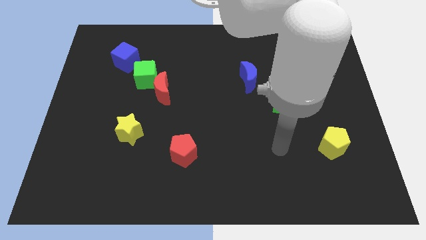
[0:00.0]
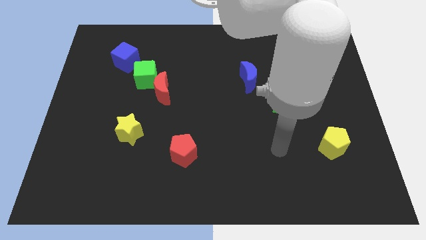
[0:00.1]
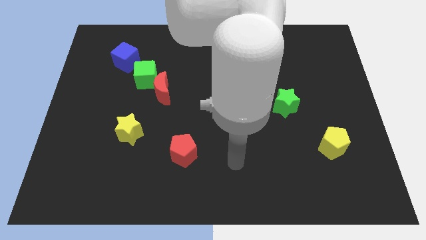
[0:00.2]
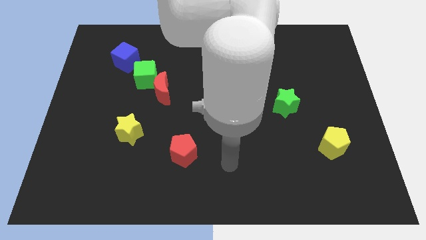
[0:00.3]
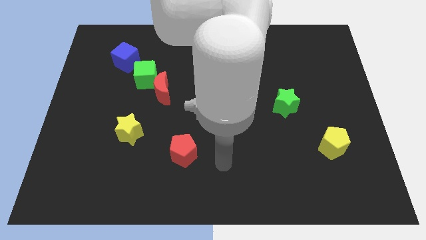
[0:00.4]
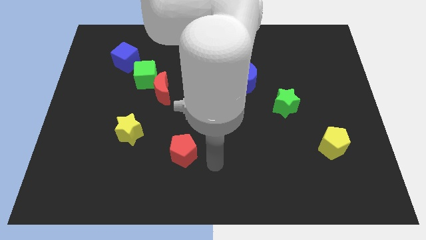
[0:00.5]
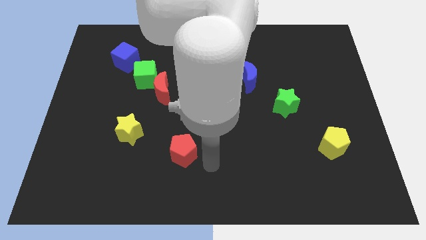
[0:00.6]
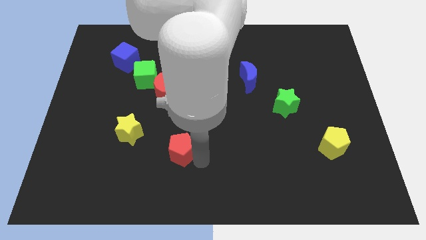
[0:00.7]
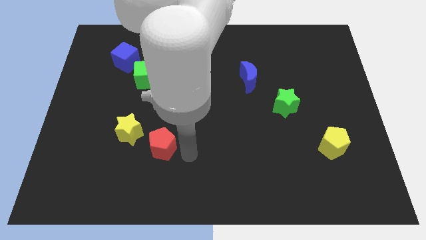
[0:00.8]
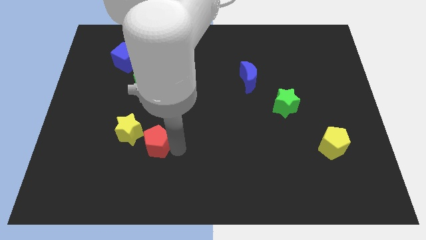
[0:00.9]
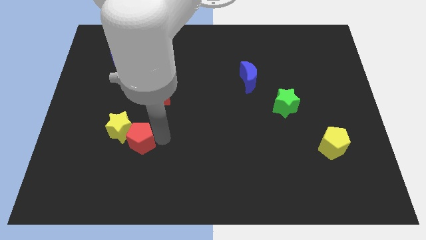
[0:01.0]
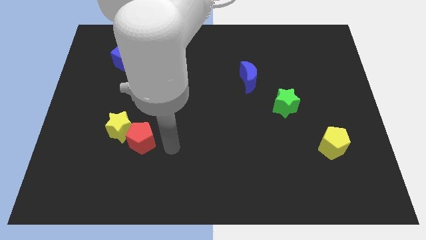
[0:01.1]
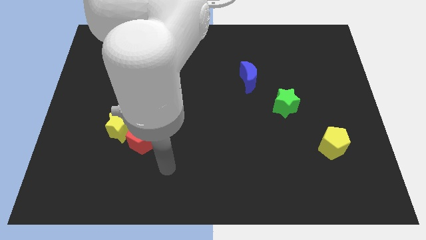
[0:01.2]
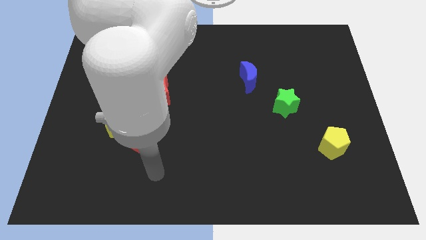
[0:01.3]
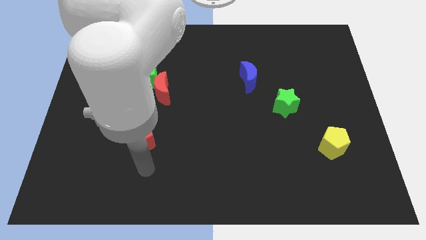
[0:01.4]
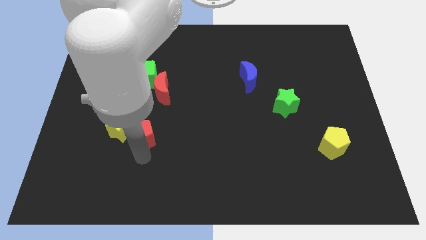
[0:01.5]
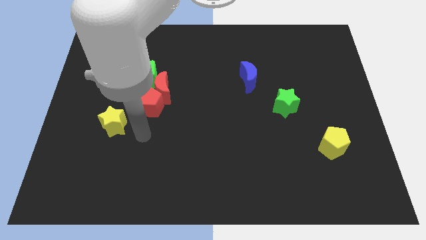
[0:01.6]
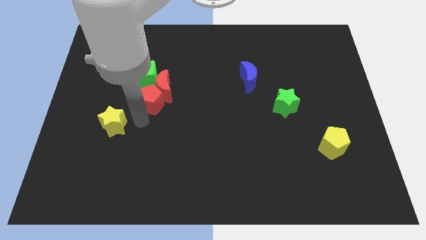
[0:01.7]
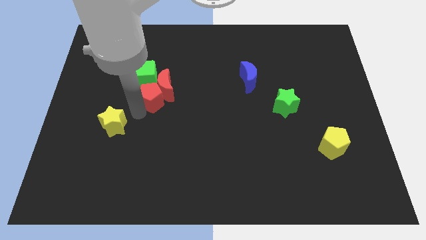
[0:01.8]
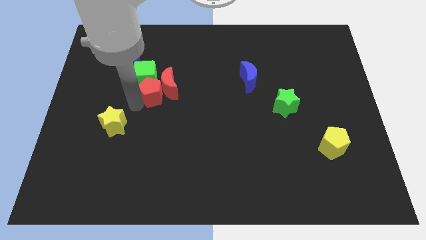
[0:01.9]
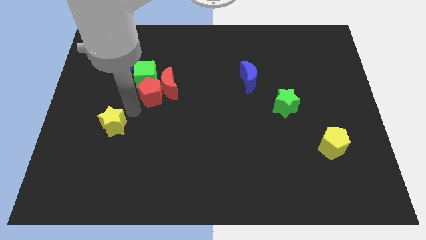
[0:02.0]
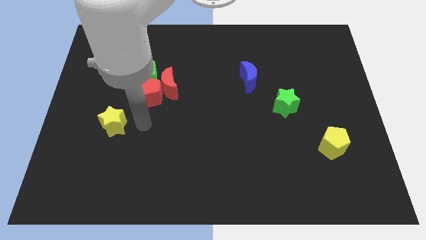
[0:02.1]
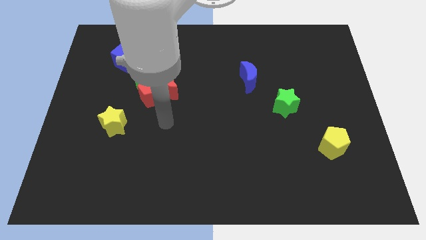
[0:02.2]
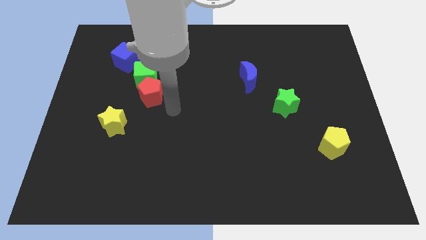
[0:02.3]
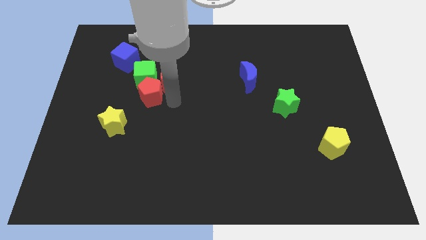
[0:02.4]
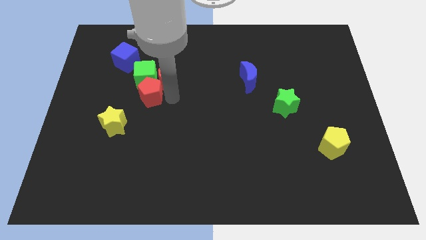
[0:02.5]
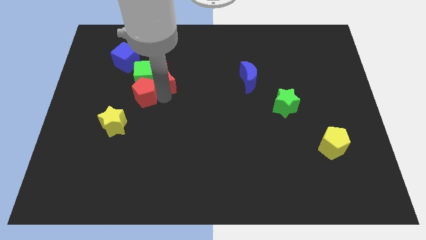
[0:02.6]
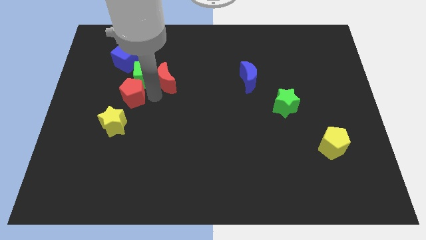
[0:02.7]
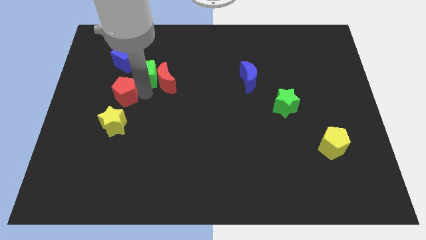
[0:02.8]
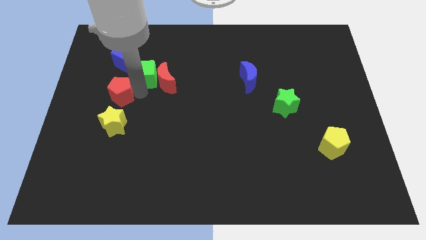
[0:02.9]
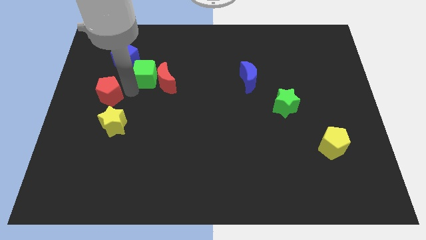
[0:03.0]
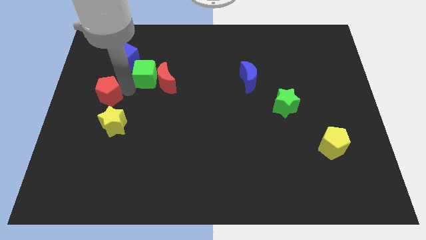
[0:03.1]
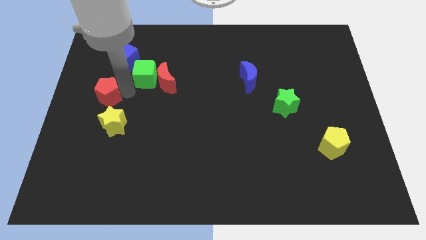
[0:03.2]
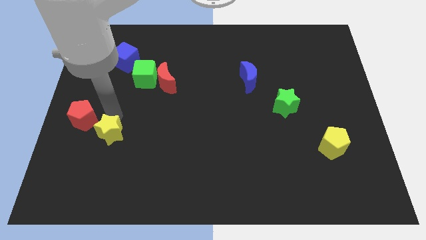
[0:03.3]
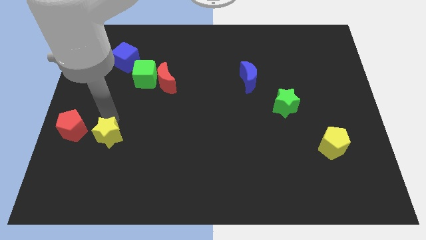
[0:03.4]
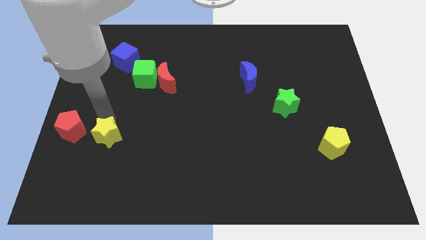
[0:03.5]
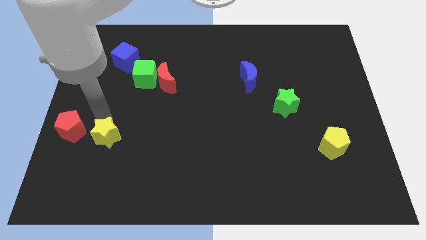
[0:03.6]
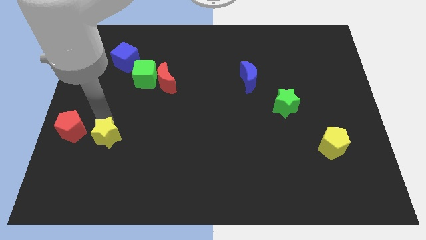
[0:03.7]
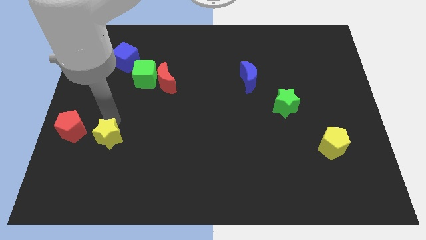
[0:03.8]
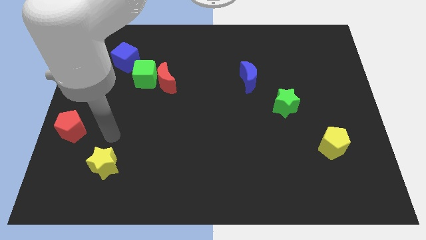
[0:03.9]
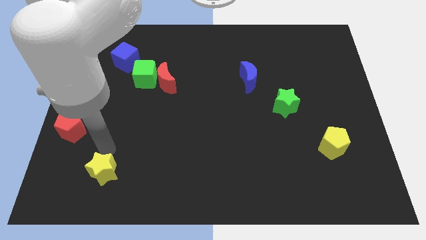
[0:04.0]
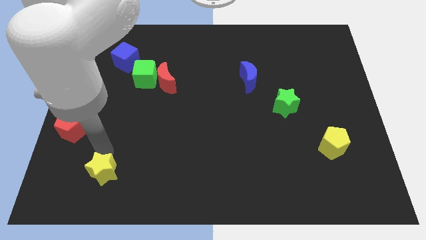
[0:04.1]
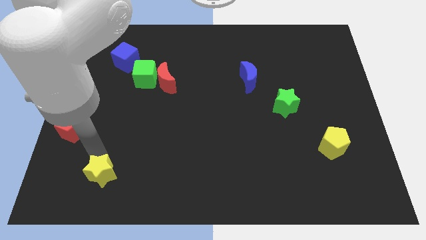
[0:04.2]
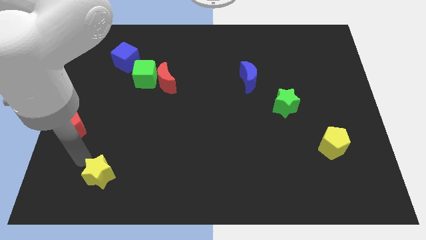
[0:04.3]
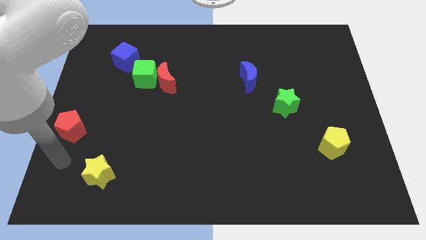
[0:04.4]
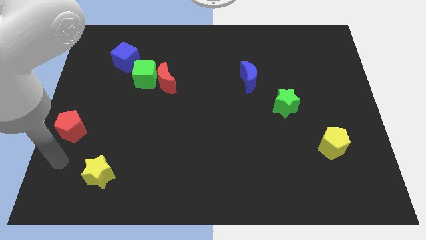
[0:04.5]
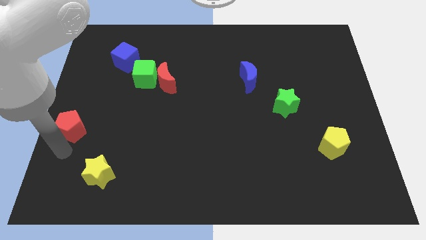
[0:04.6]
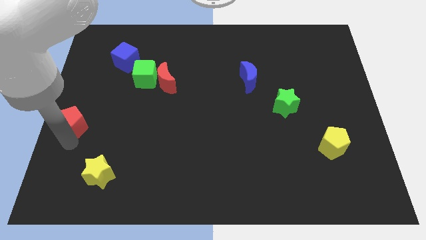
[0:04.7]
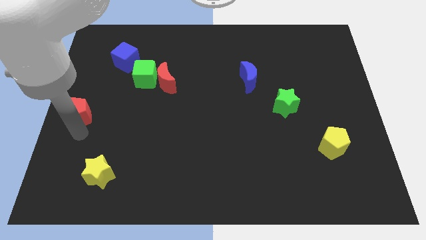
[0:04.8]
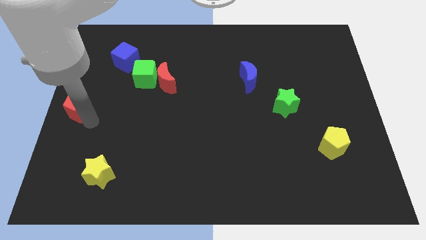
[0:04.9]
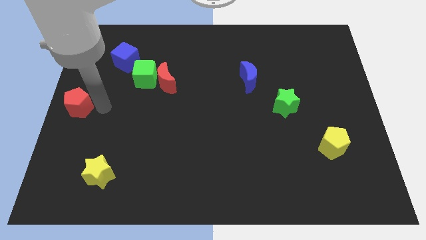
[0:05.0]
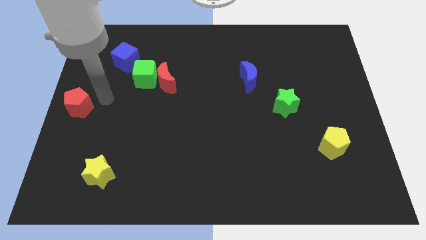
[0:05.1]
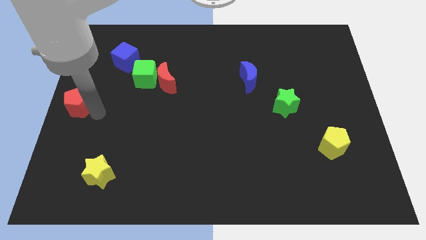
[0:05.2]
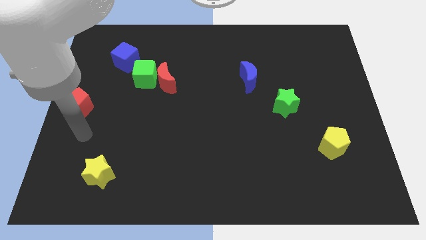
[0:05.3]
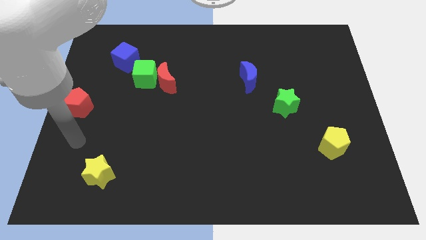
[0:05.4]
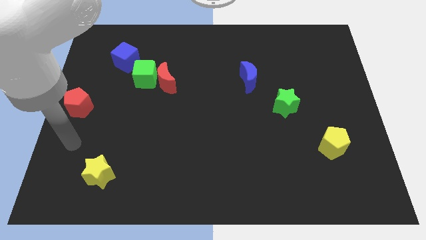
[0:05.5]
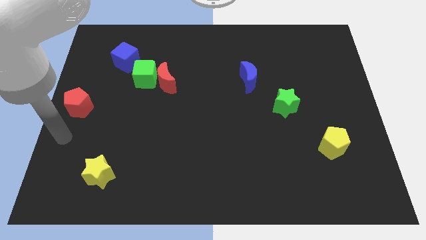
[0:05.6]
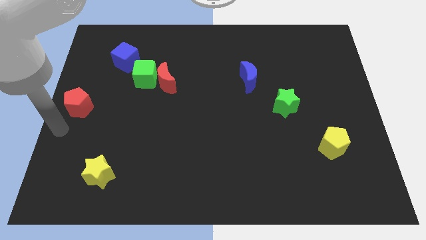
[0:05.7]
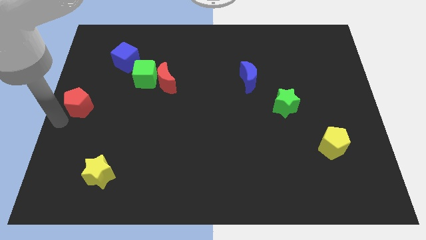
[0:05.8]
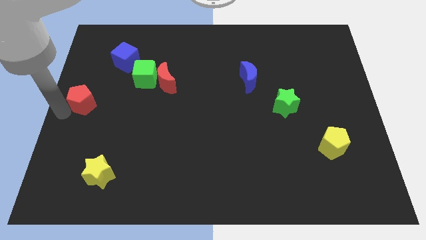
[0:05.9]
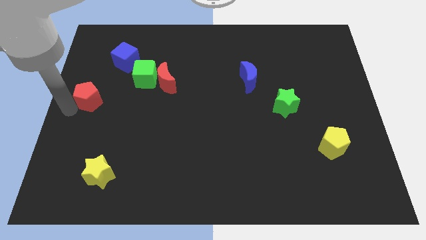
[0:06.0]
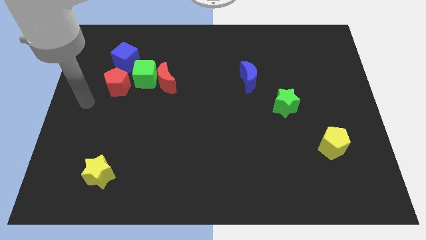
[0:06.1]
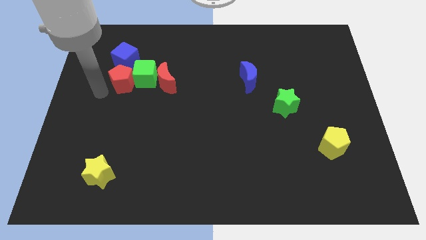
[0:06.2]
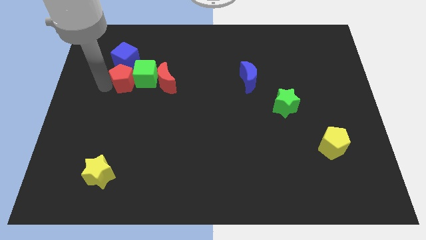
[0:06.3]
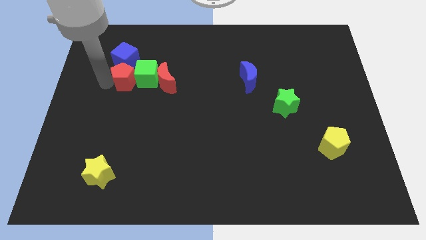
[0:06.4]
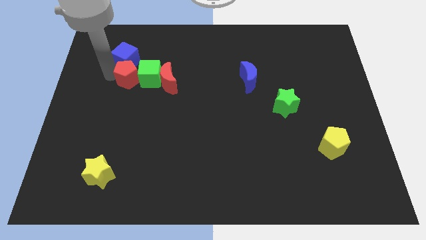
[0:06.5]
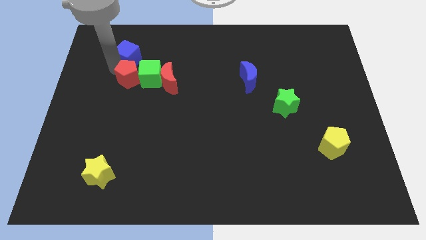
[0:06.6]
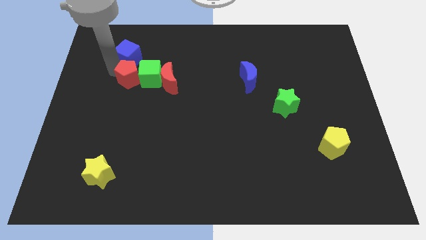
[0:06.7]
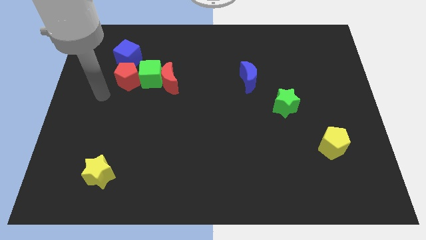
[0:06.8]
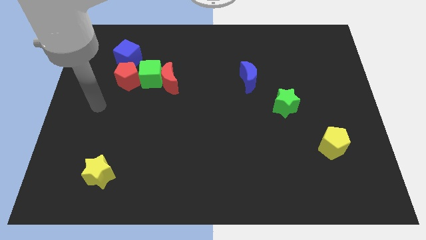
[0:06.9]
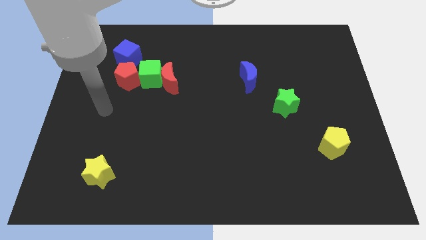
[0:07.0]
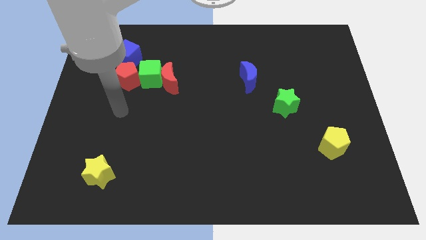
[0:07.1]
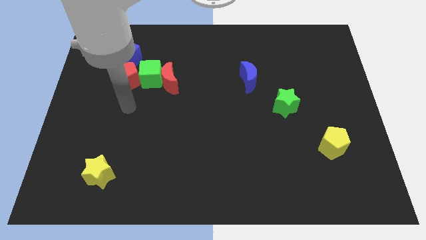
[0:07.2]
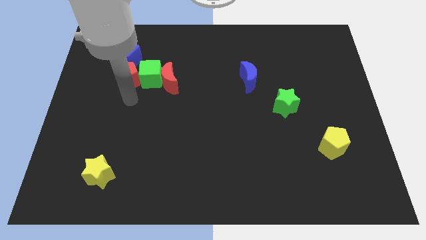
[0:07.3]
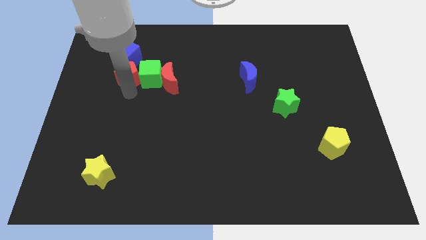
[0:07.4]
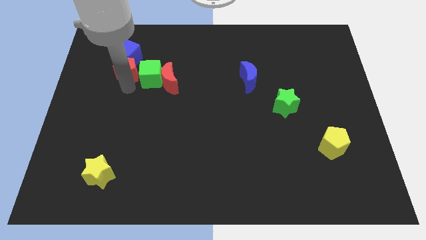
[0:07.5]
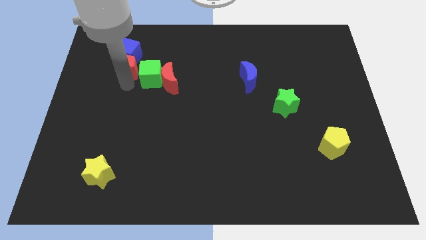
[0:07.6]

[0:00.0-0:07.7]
slide the red pentagon close to the blue cube

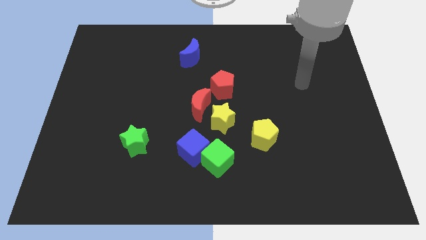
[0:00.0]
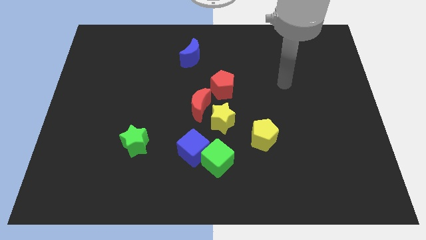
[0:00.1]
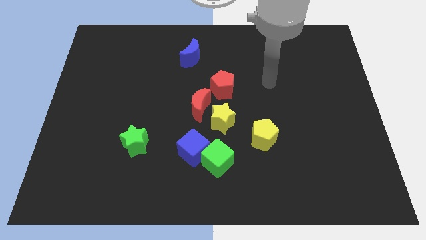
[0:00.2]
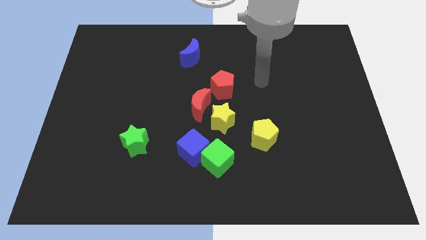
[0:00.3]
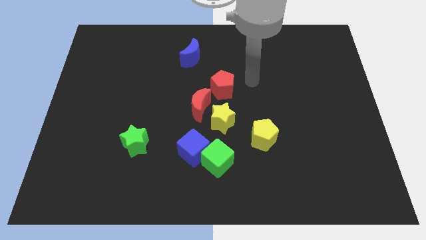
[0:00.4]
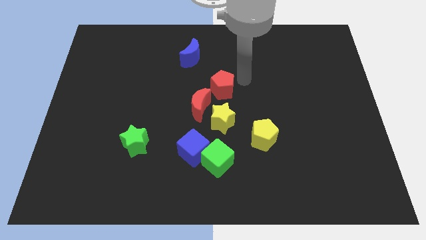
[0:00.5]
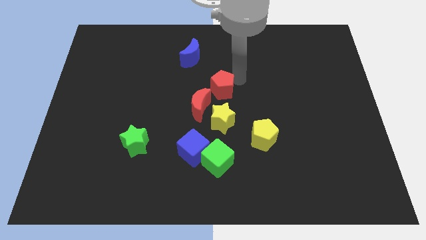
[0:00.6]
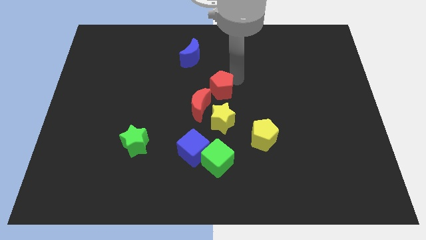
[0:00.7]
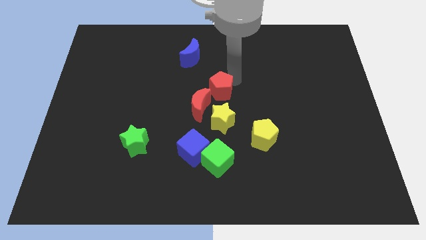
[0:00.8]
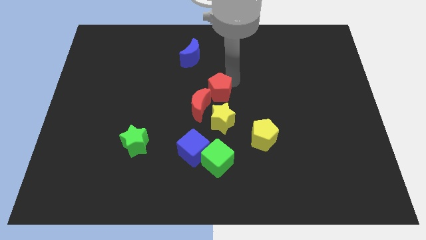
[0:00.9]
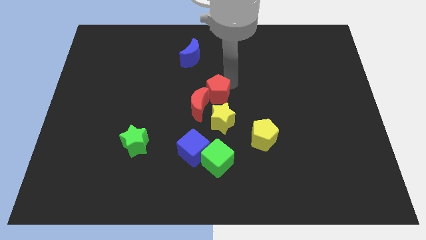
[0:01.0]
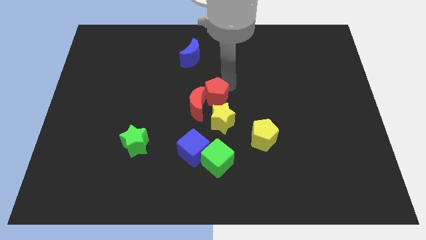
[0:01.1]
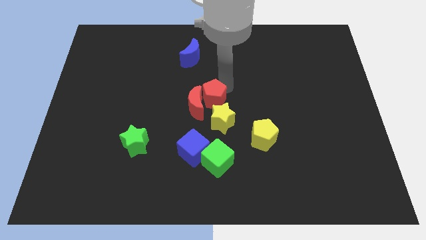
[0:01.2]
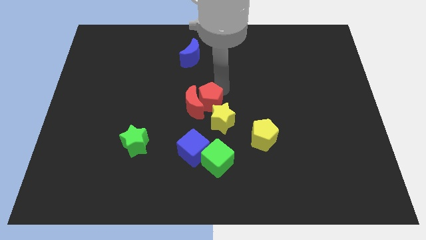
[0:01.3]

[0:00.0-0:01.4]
slide the red pentagon close to the red moon
